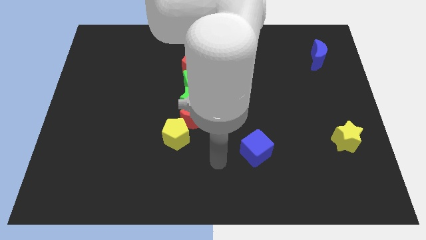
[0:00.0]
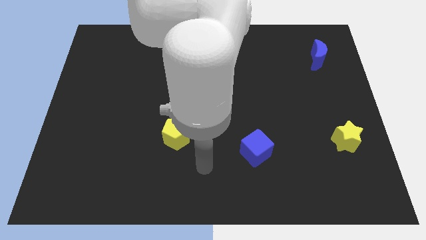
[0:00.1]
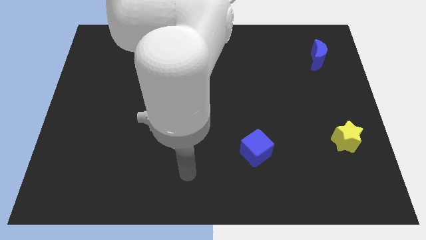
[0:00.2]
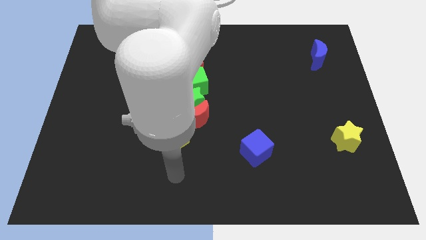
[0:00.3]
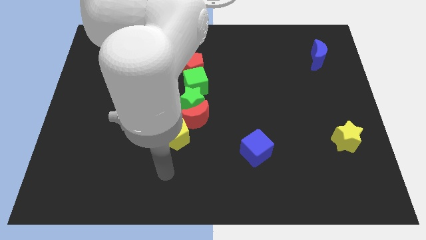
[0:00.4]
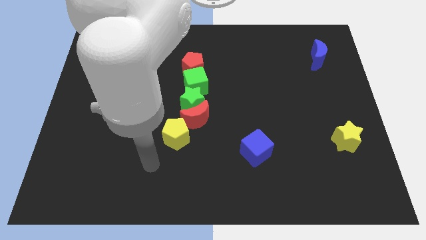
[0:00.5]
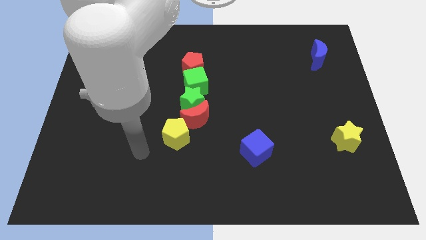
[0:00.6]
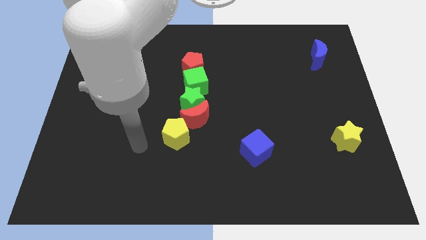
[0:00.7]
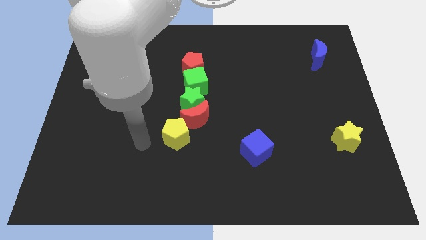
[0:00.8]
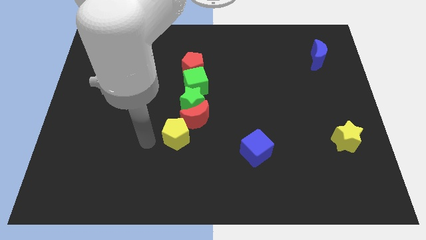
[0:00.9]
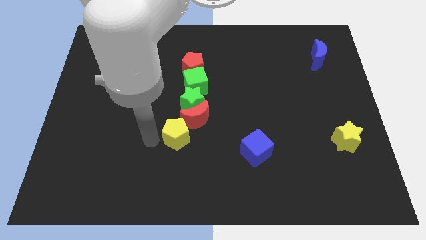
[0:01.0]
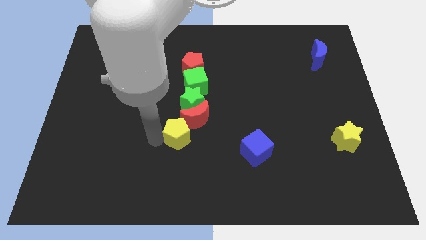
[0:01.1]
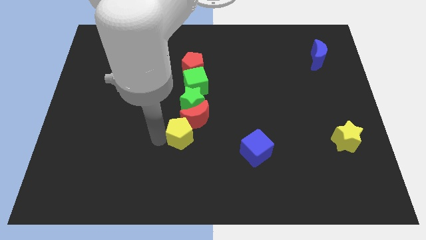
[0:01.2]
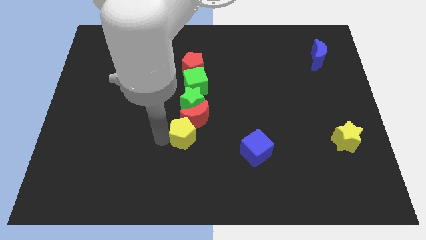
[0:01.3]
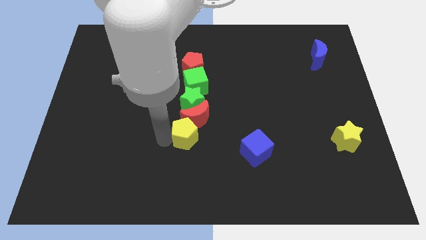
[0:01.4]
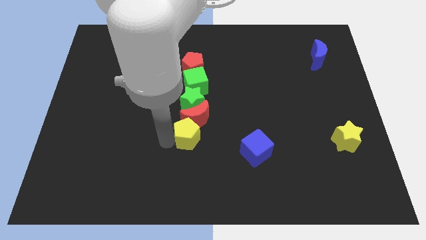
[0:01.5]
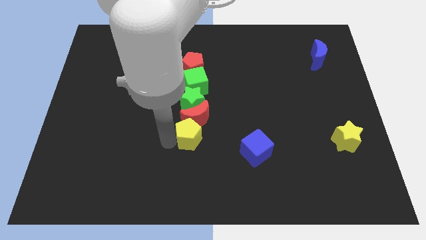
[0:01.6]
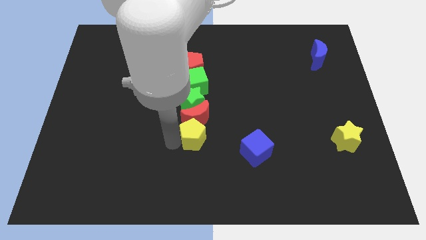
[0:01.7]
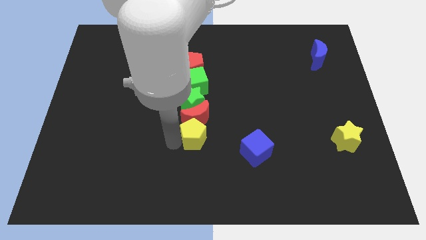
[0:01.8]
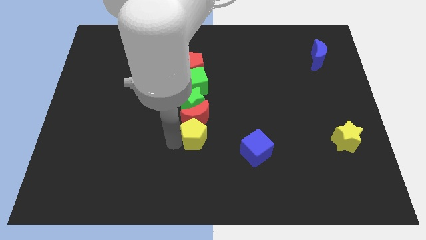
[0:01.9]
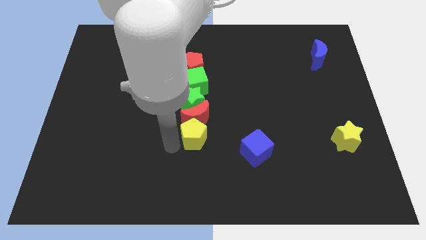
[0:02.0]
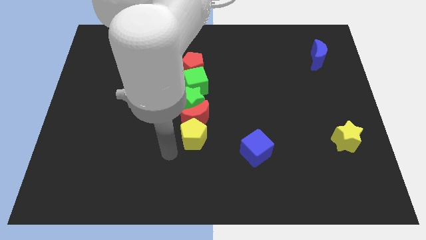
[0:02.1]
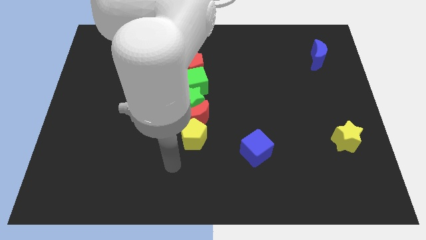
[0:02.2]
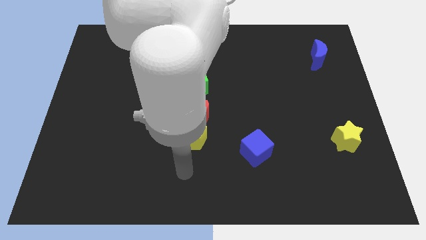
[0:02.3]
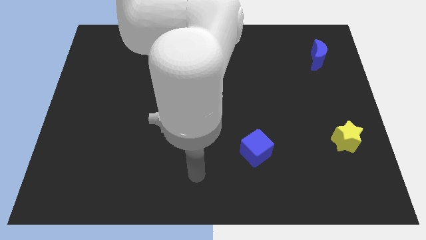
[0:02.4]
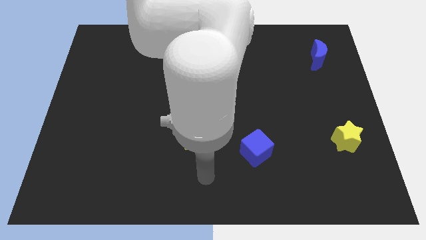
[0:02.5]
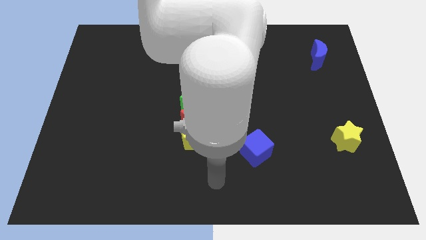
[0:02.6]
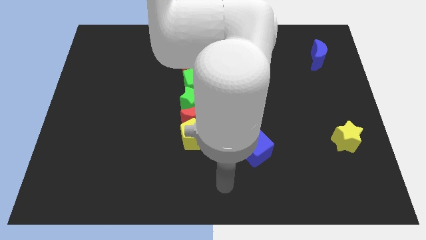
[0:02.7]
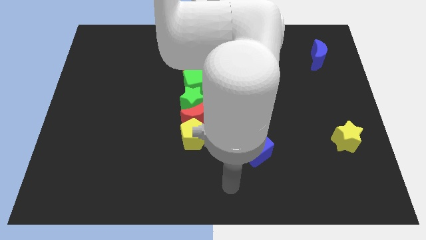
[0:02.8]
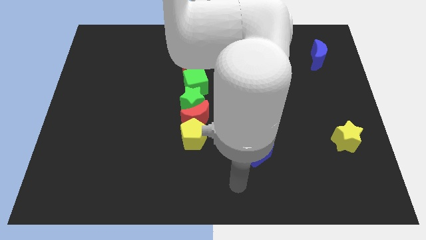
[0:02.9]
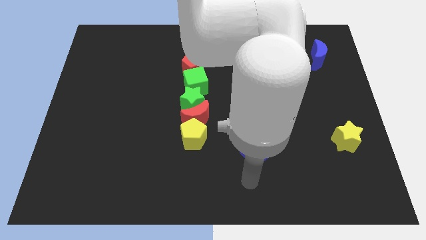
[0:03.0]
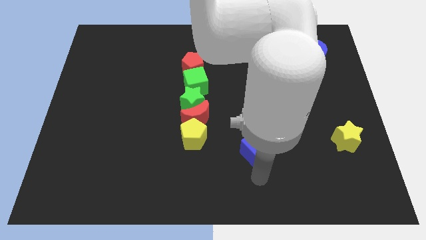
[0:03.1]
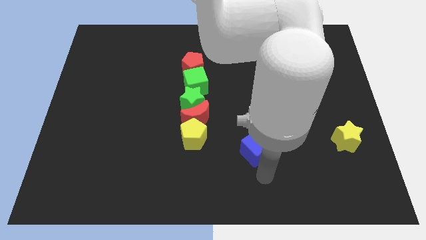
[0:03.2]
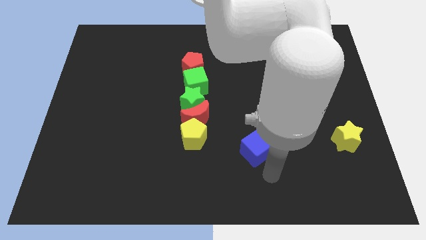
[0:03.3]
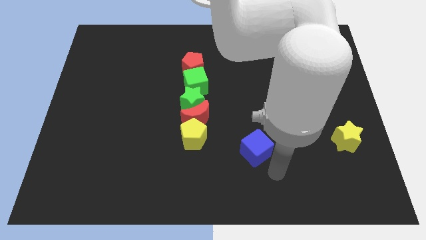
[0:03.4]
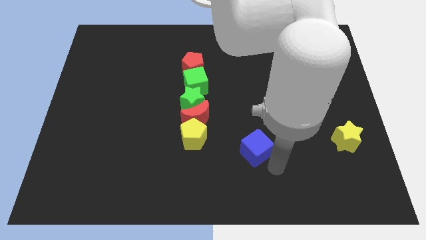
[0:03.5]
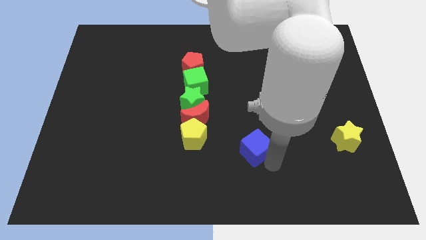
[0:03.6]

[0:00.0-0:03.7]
slightly move the yellow pentagon to the bottom of the red crescent

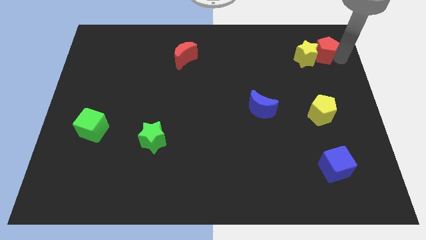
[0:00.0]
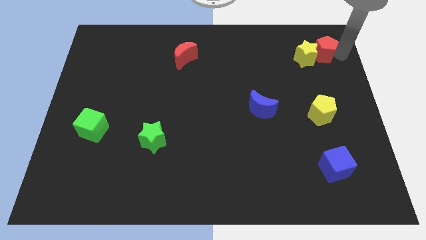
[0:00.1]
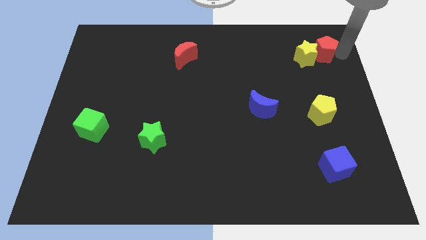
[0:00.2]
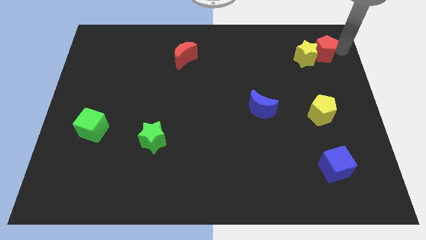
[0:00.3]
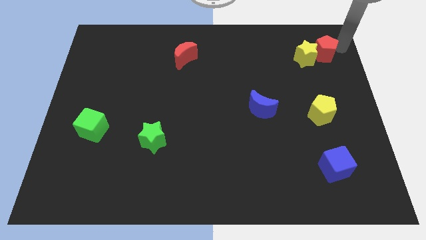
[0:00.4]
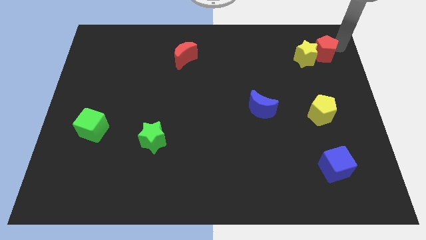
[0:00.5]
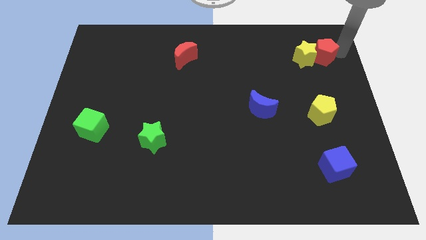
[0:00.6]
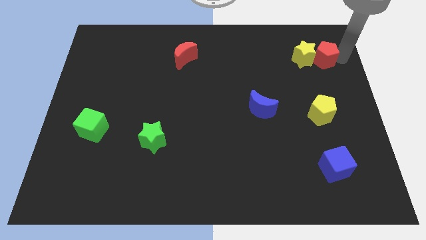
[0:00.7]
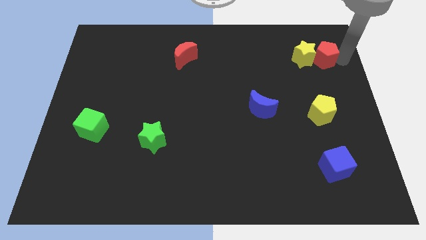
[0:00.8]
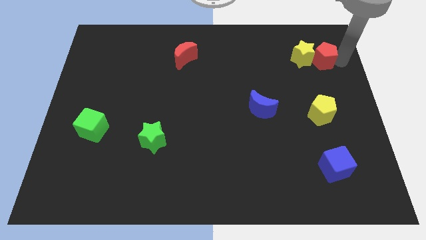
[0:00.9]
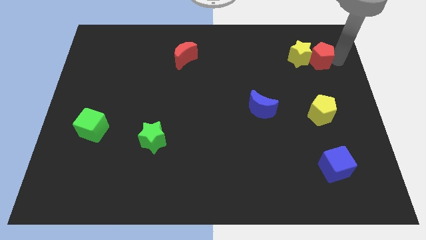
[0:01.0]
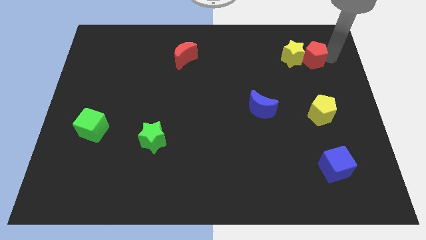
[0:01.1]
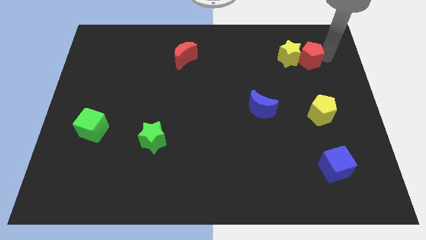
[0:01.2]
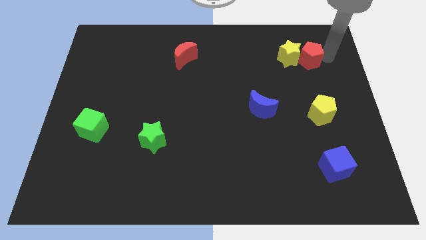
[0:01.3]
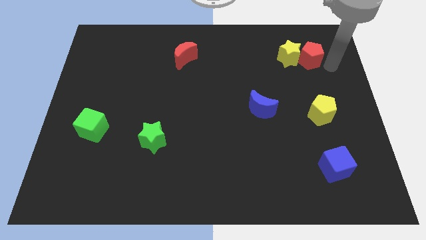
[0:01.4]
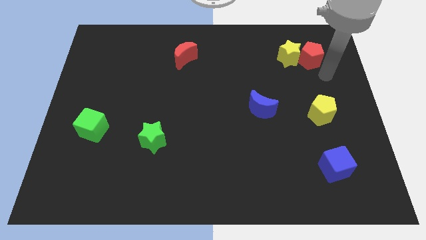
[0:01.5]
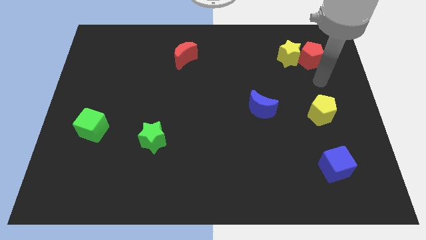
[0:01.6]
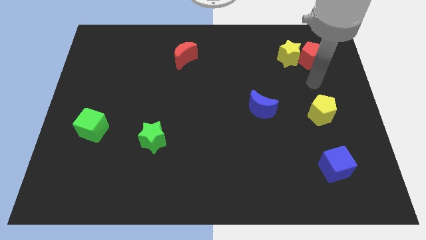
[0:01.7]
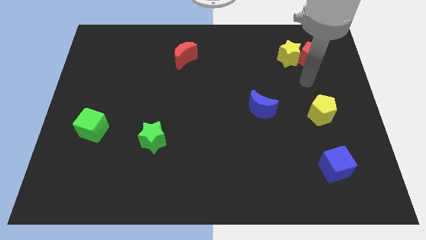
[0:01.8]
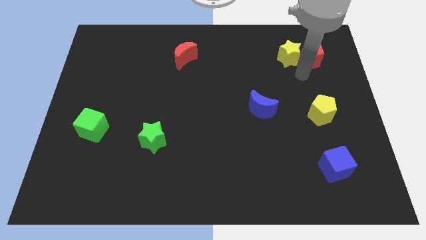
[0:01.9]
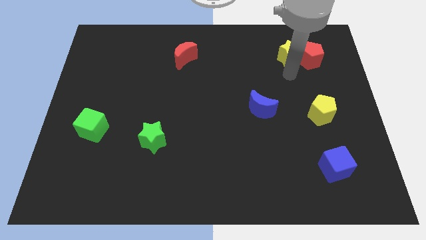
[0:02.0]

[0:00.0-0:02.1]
push the red pentagon along with the yellow star slightly to the left

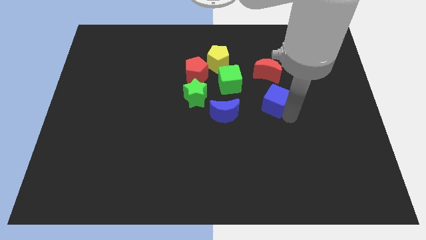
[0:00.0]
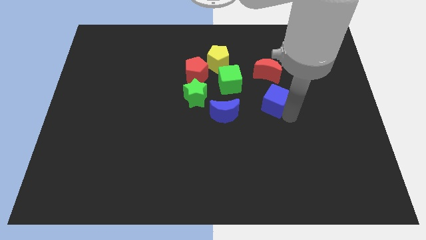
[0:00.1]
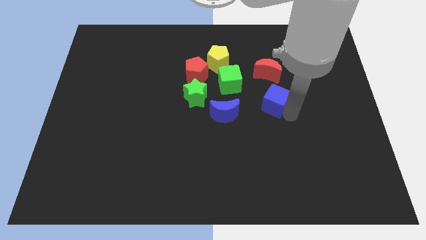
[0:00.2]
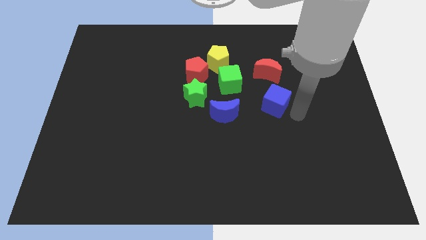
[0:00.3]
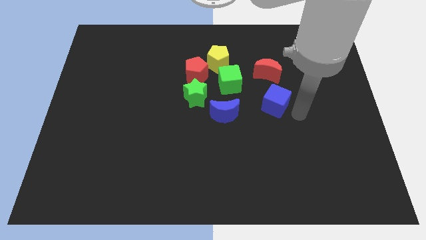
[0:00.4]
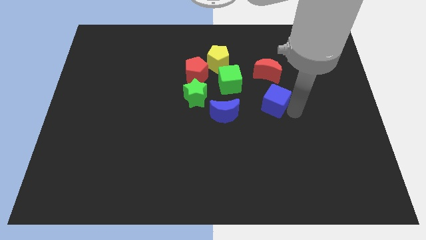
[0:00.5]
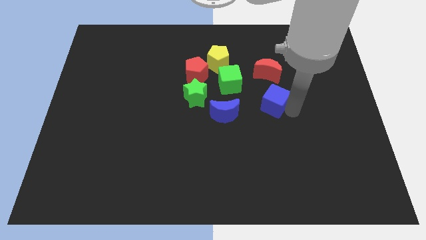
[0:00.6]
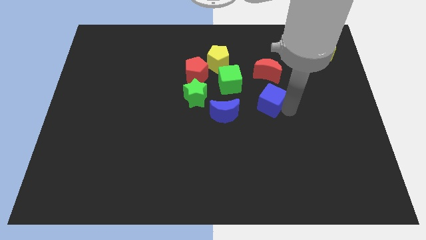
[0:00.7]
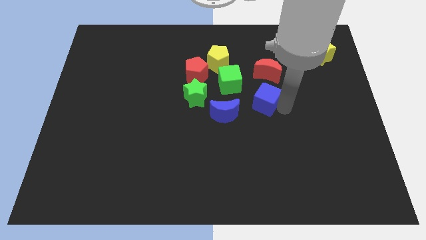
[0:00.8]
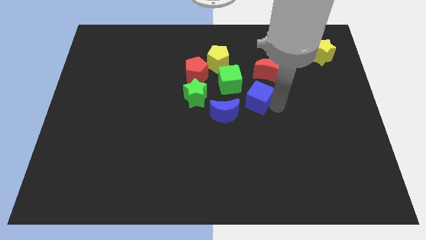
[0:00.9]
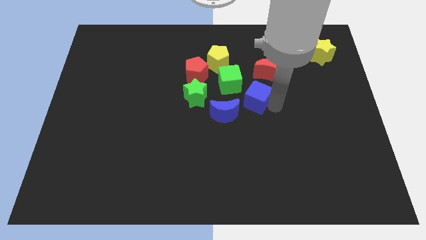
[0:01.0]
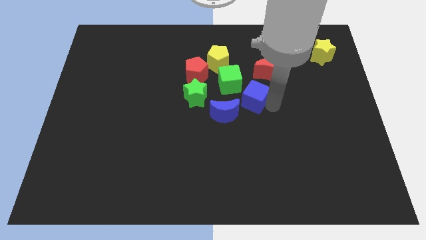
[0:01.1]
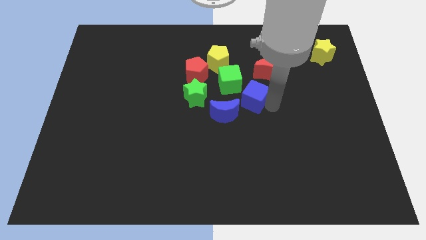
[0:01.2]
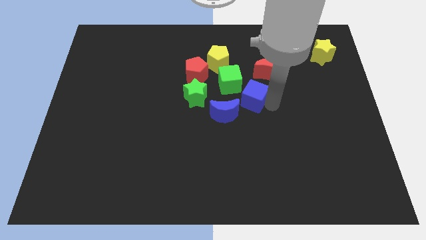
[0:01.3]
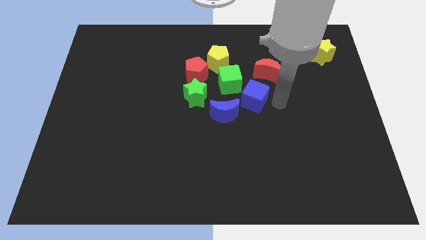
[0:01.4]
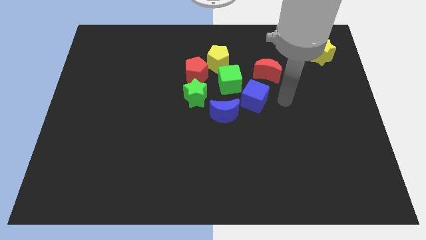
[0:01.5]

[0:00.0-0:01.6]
move the blue cube close to the green cube

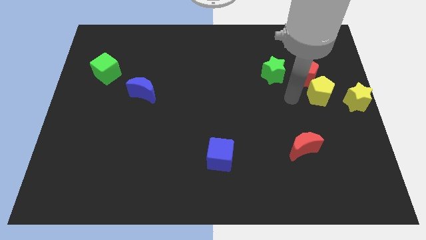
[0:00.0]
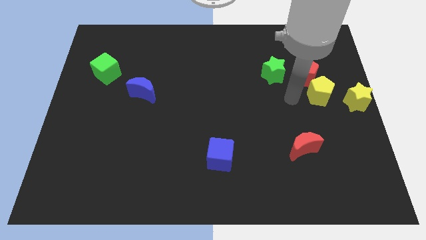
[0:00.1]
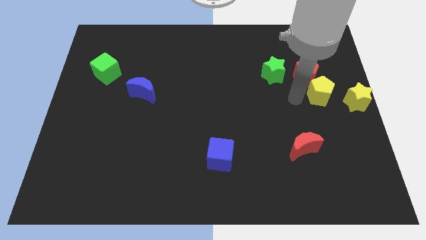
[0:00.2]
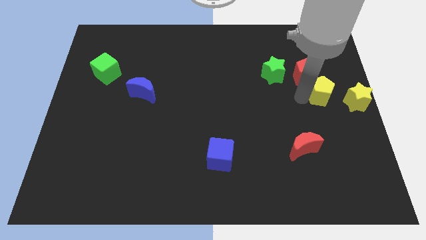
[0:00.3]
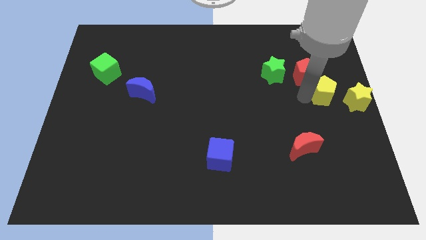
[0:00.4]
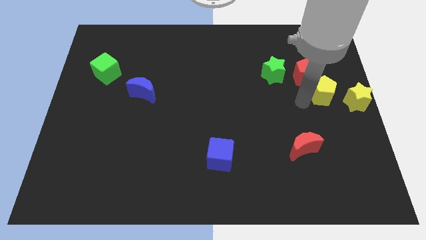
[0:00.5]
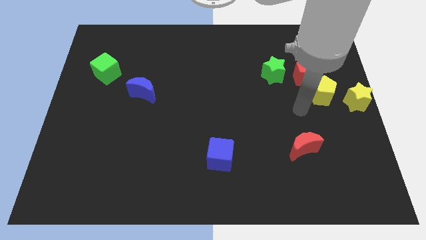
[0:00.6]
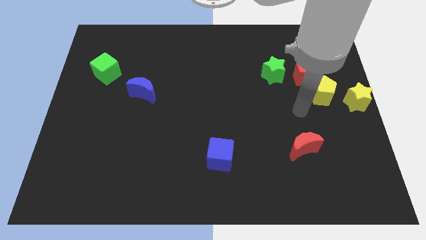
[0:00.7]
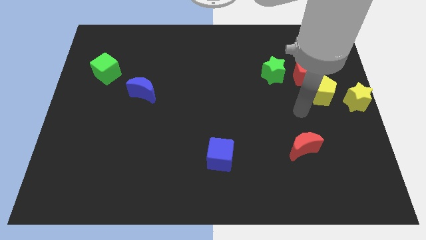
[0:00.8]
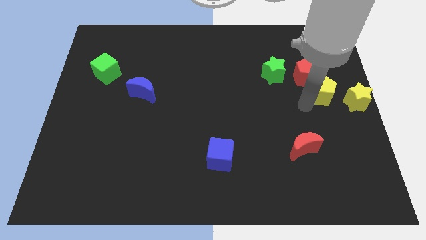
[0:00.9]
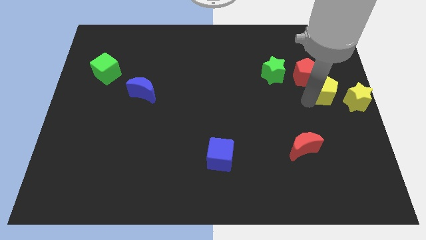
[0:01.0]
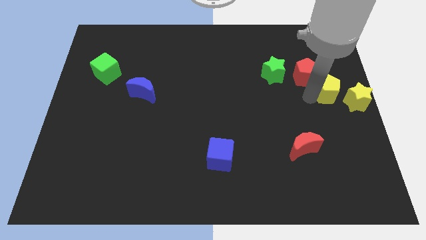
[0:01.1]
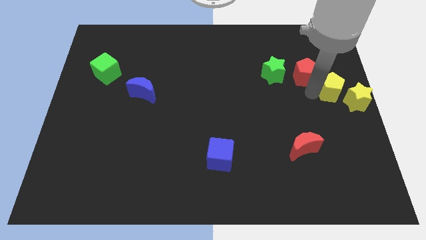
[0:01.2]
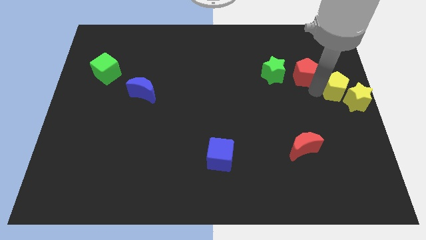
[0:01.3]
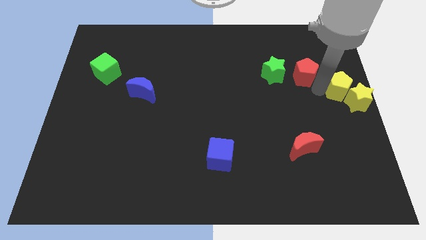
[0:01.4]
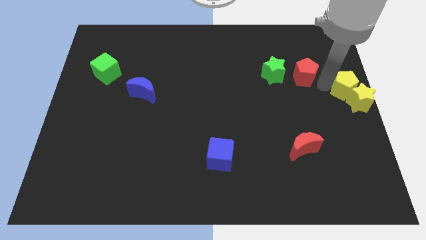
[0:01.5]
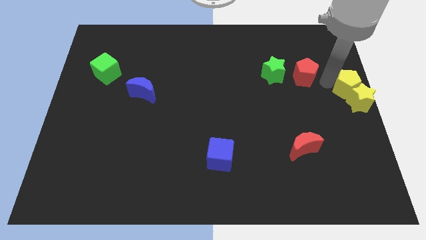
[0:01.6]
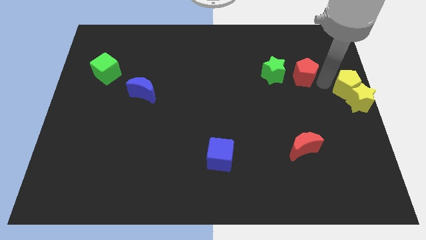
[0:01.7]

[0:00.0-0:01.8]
move yellow pentagon into the yellow star
